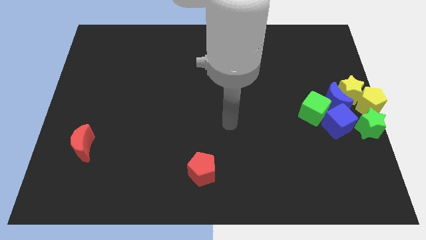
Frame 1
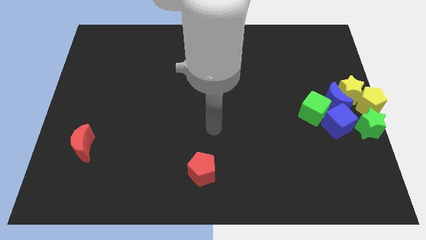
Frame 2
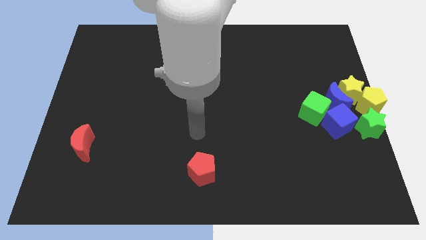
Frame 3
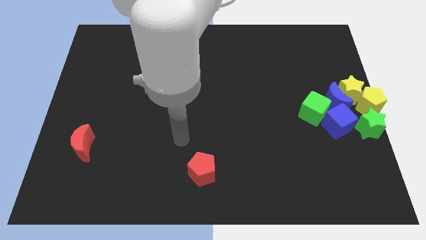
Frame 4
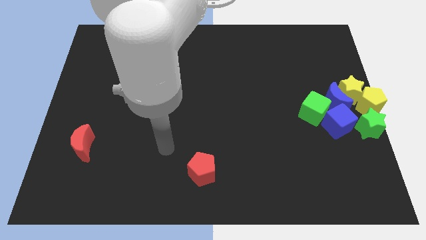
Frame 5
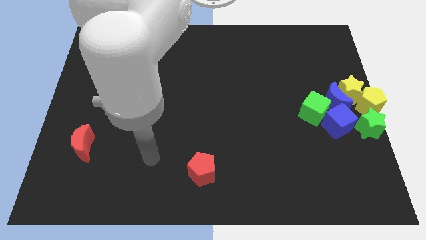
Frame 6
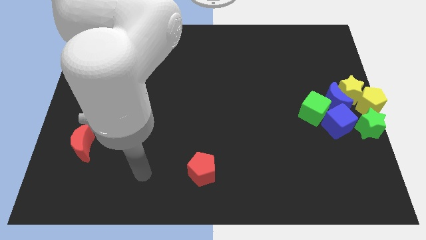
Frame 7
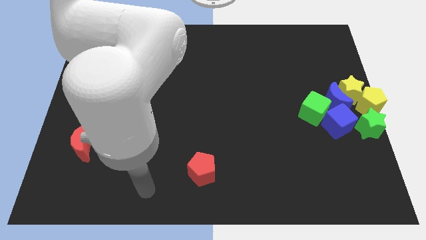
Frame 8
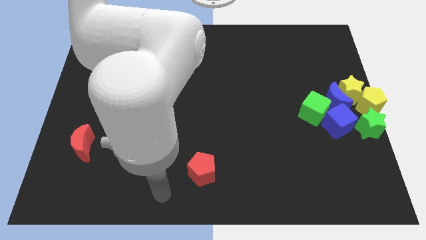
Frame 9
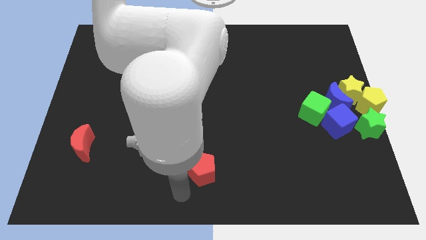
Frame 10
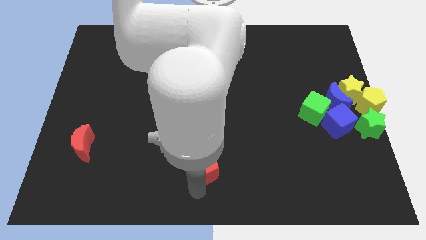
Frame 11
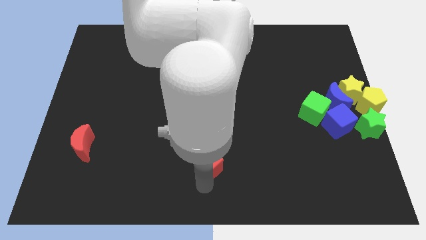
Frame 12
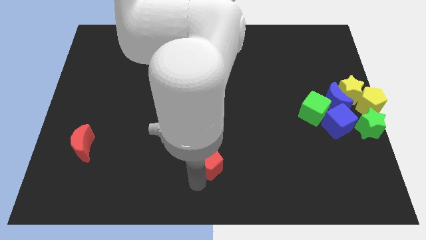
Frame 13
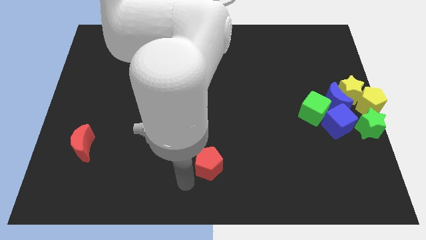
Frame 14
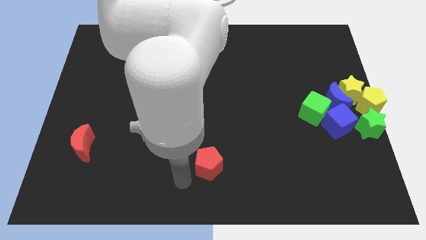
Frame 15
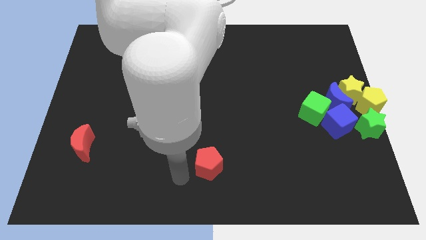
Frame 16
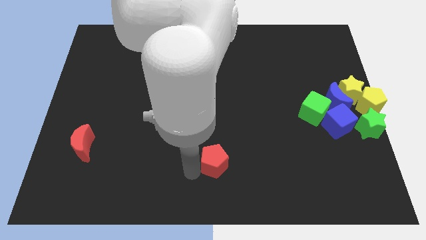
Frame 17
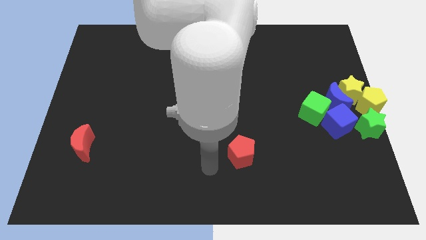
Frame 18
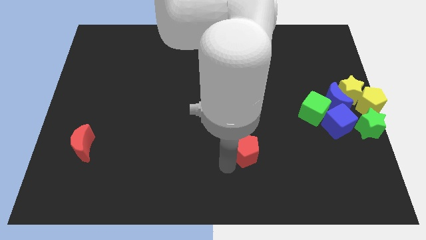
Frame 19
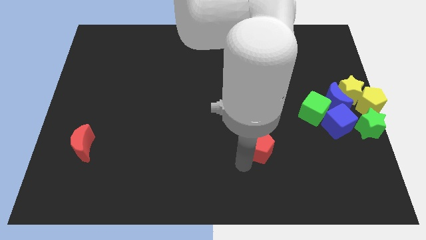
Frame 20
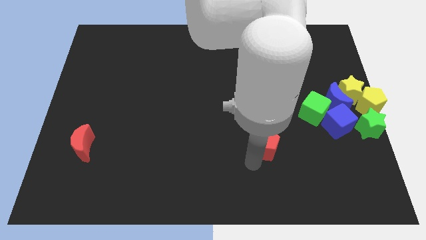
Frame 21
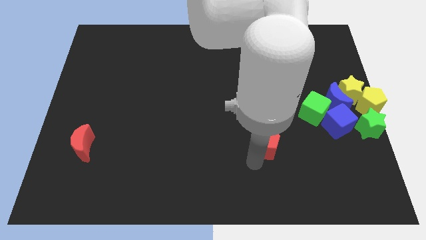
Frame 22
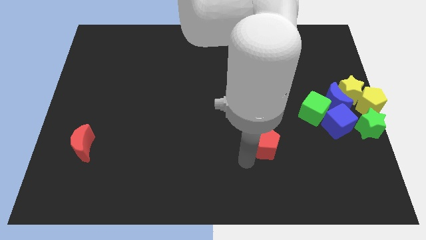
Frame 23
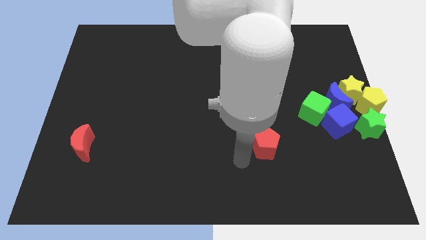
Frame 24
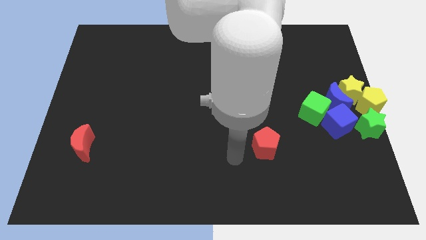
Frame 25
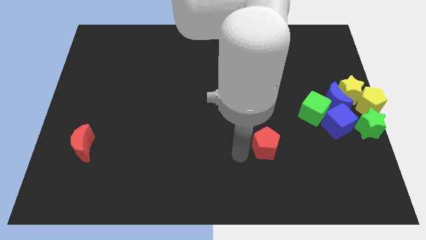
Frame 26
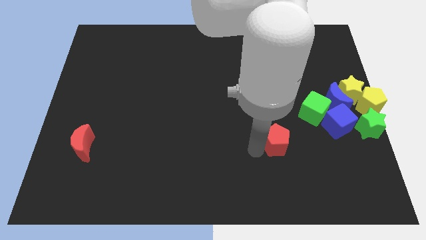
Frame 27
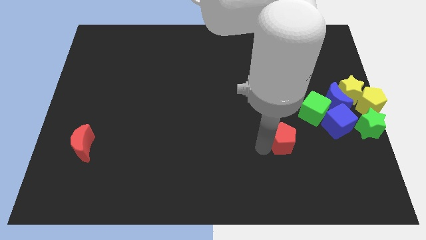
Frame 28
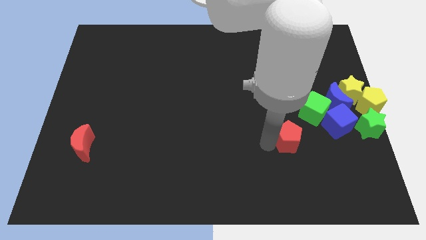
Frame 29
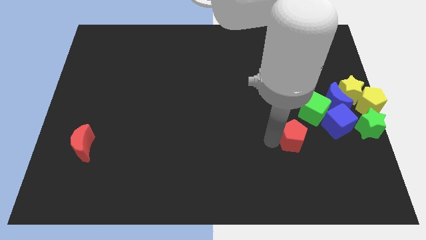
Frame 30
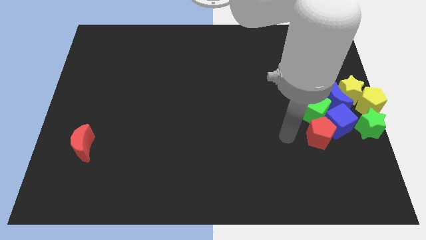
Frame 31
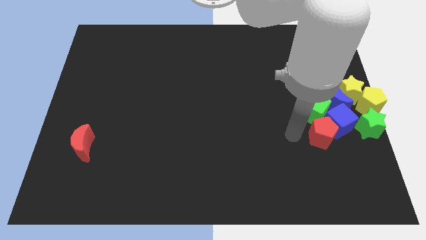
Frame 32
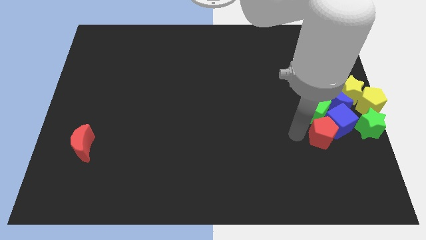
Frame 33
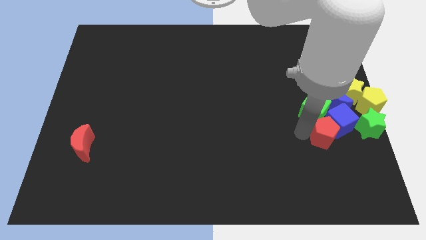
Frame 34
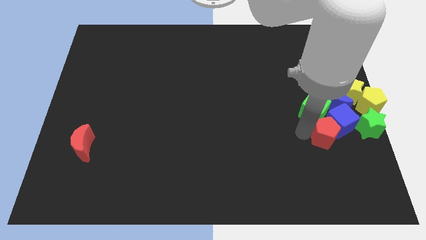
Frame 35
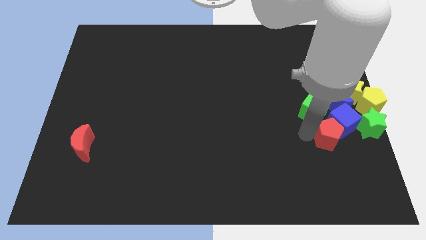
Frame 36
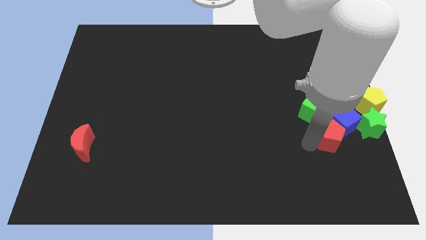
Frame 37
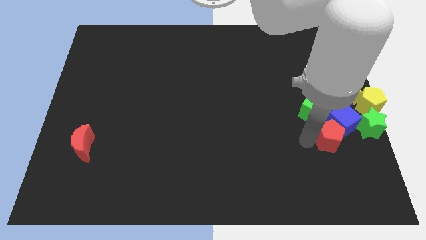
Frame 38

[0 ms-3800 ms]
move the red pentagon towards the blue cube

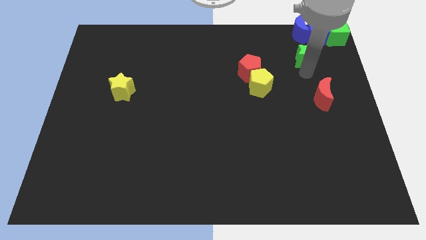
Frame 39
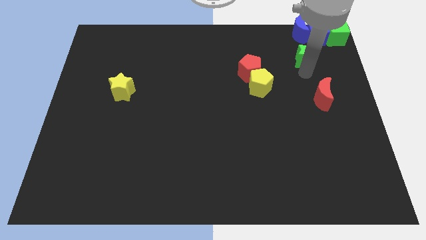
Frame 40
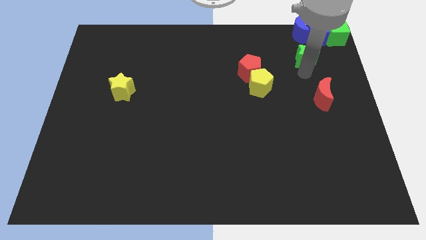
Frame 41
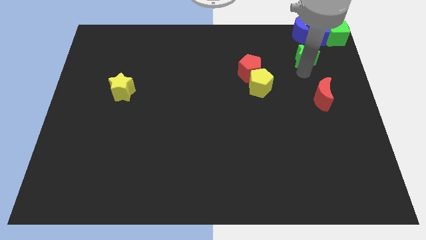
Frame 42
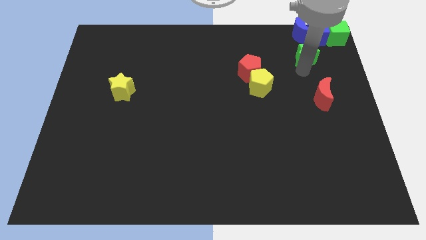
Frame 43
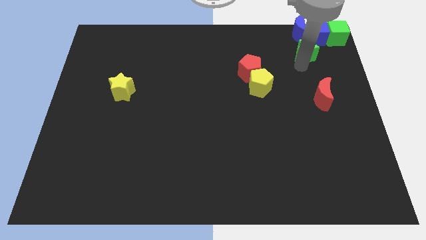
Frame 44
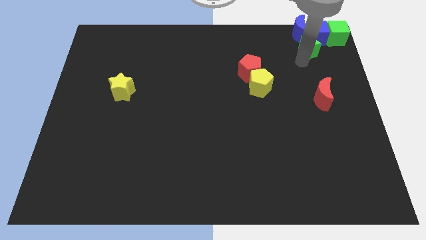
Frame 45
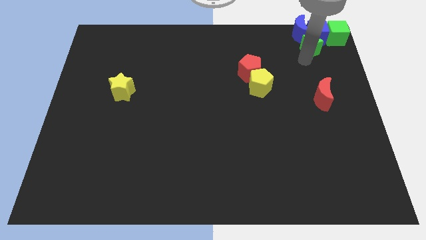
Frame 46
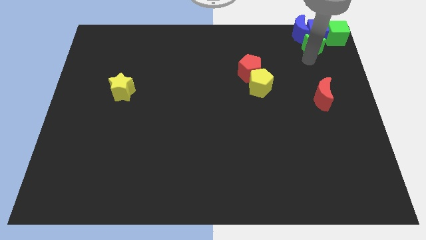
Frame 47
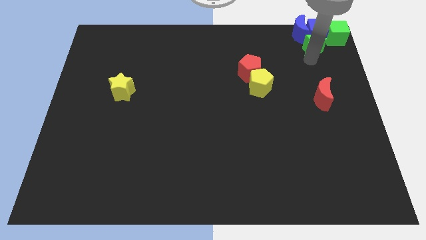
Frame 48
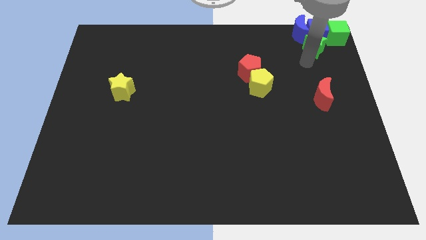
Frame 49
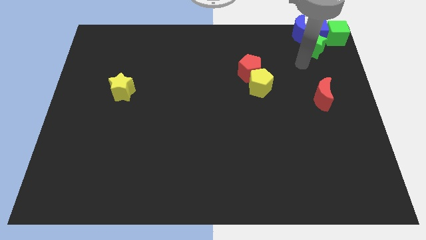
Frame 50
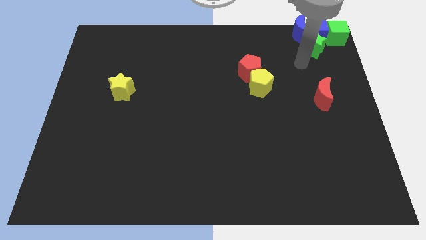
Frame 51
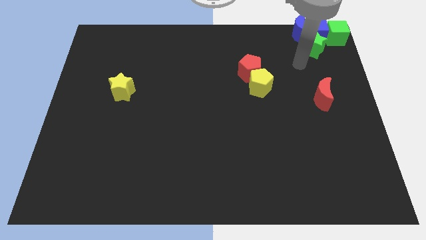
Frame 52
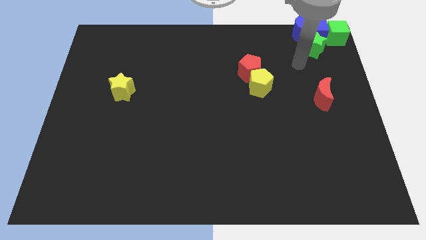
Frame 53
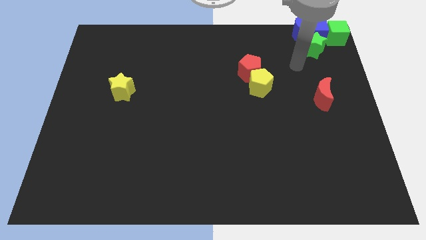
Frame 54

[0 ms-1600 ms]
push the green star into the bottom of the blue cube

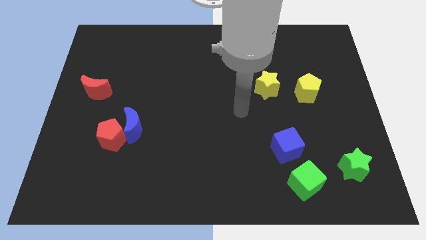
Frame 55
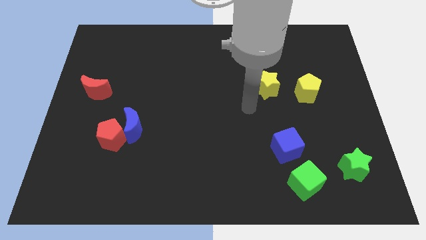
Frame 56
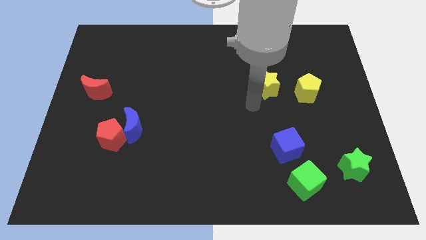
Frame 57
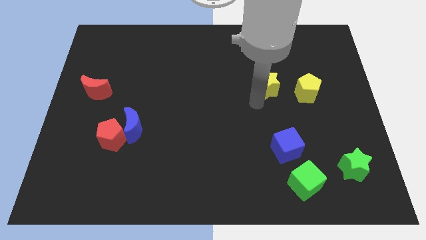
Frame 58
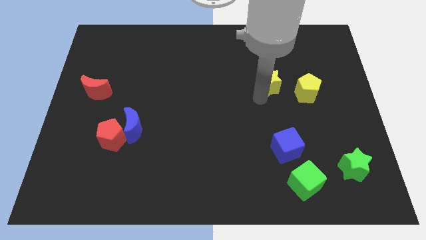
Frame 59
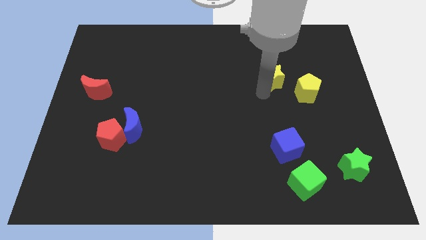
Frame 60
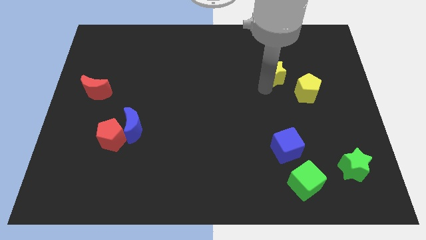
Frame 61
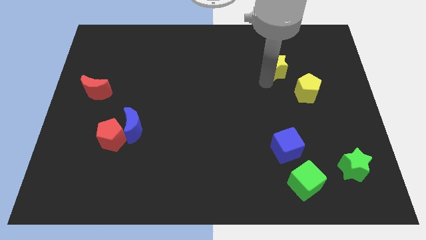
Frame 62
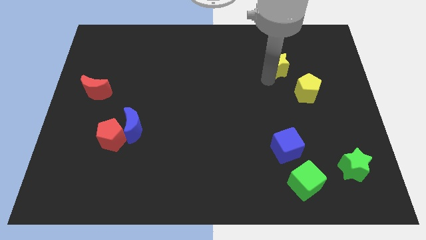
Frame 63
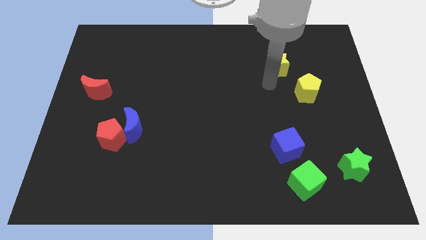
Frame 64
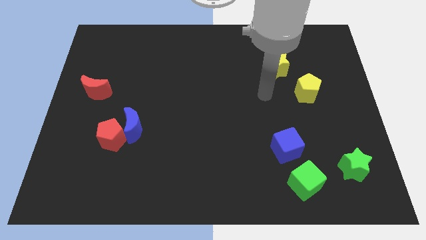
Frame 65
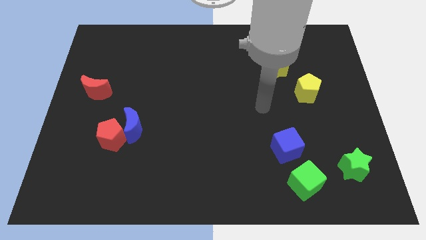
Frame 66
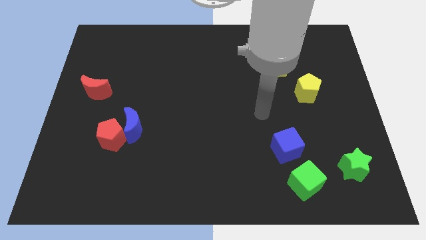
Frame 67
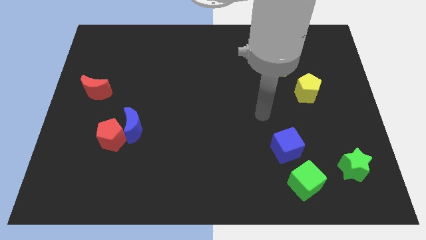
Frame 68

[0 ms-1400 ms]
move yellow star diagonally above the yellow pentagon

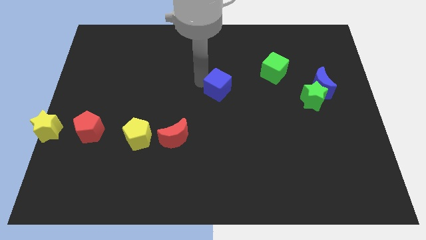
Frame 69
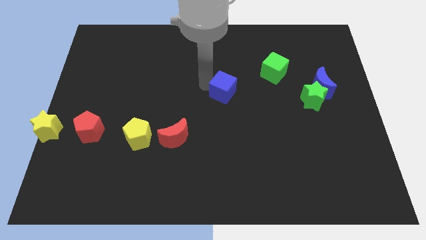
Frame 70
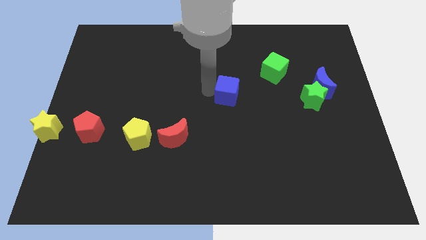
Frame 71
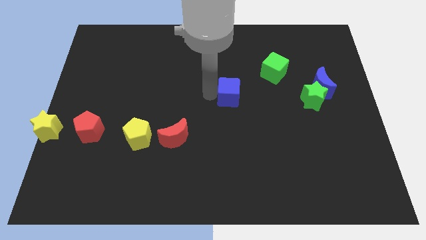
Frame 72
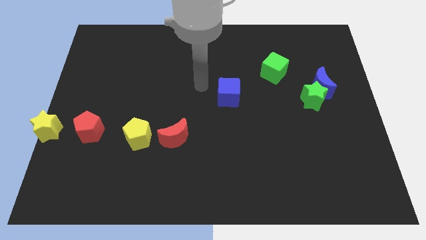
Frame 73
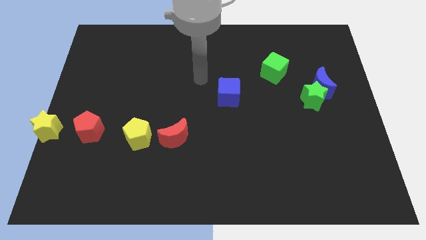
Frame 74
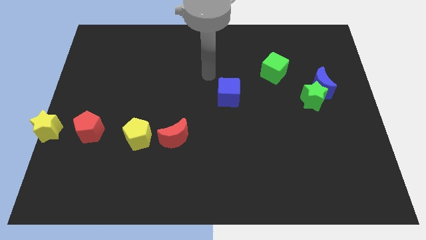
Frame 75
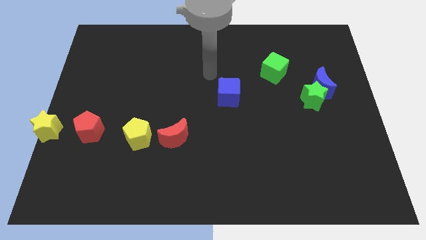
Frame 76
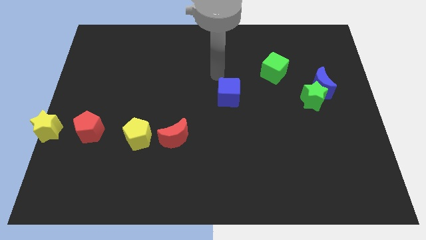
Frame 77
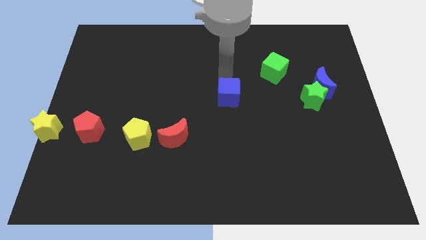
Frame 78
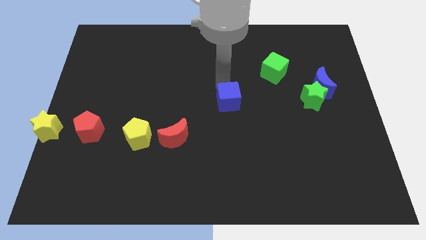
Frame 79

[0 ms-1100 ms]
push blue cube slightly downwards

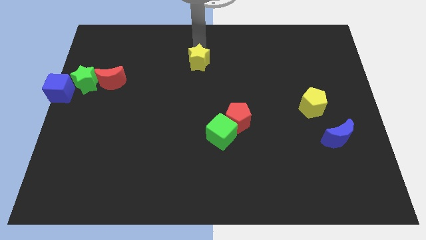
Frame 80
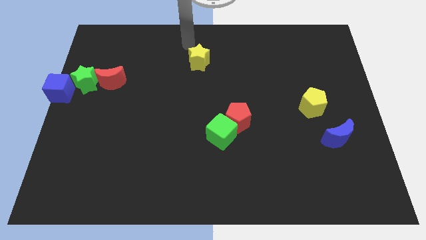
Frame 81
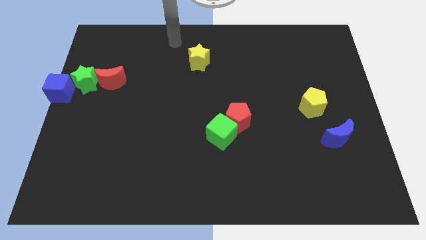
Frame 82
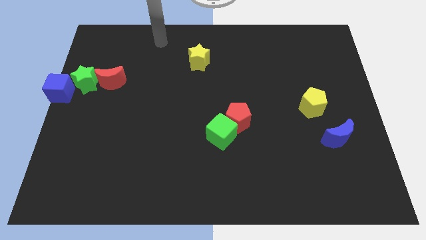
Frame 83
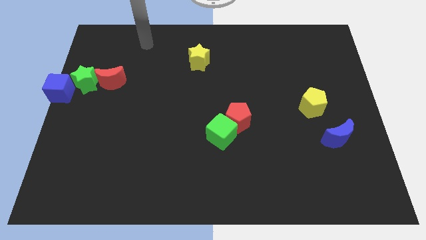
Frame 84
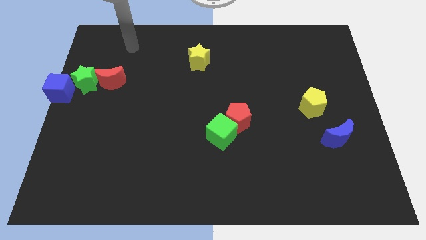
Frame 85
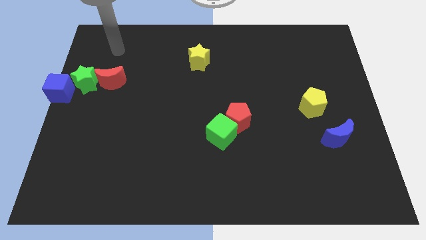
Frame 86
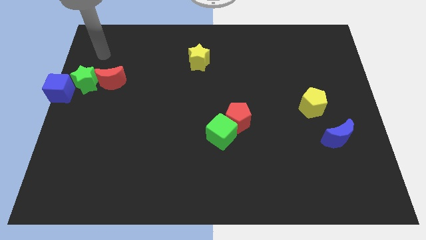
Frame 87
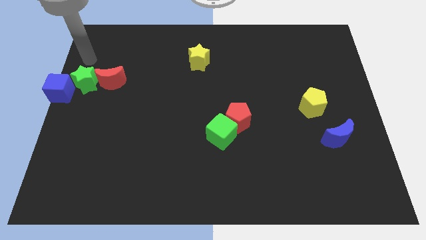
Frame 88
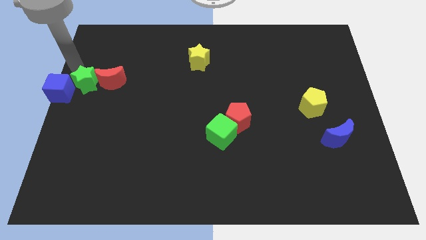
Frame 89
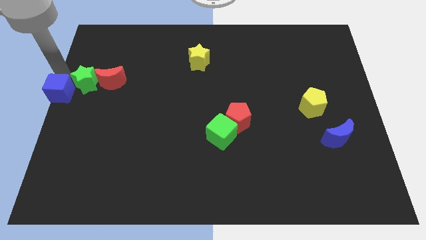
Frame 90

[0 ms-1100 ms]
place your hand at the top of the blue cube

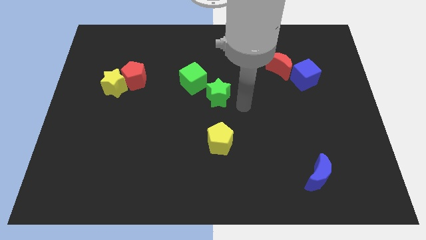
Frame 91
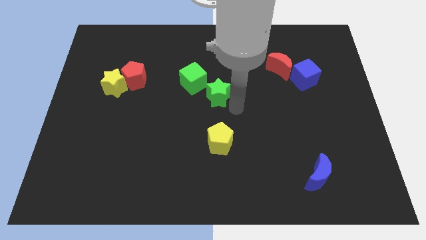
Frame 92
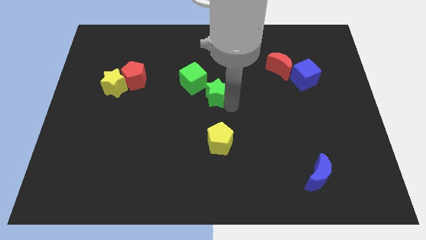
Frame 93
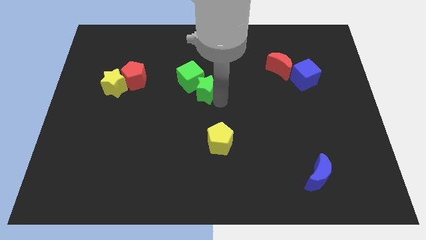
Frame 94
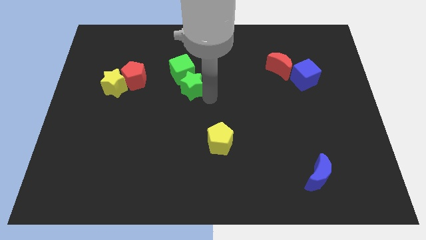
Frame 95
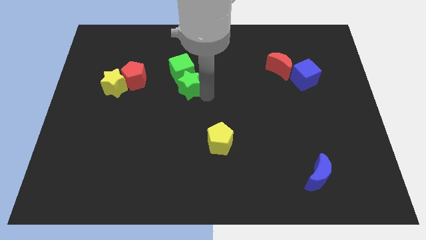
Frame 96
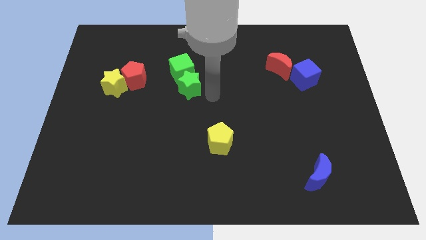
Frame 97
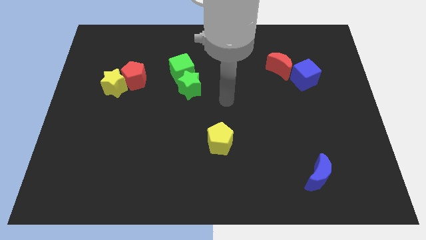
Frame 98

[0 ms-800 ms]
move green star into green cube
